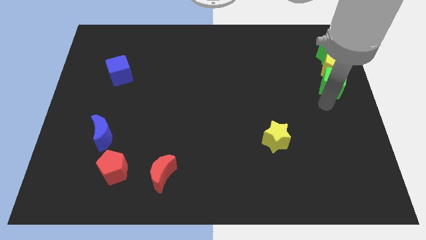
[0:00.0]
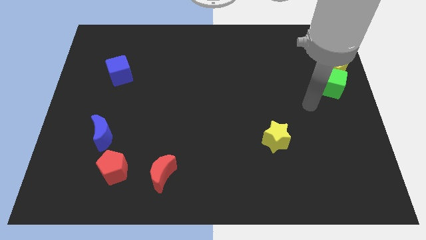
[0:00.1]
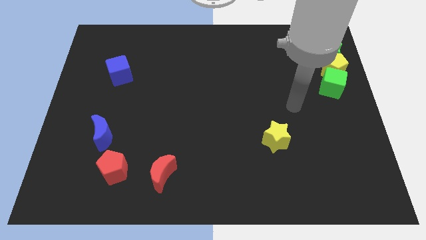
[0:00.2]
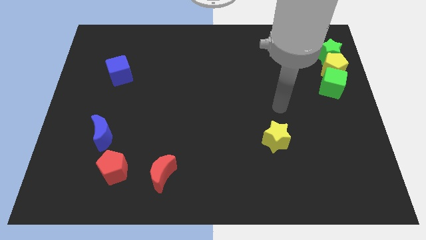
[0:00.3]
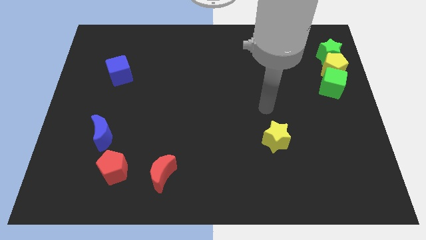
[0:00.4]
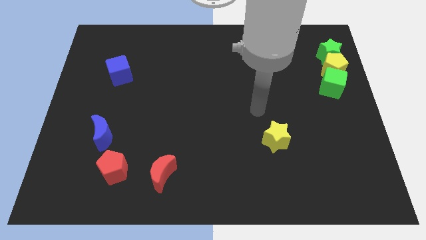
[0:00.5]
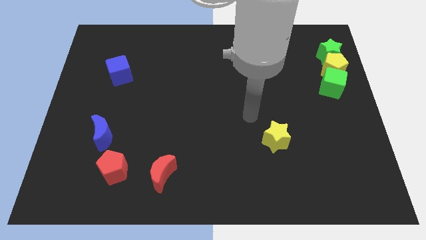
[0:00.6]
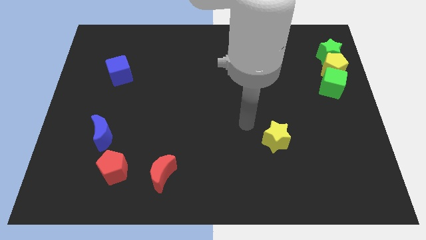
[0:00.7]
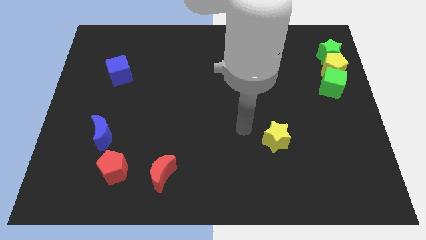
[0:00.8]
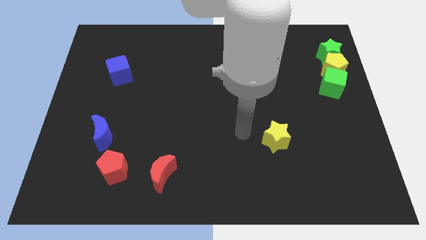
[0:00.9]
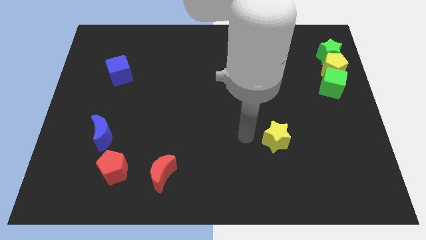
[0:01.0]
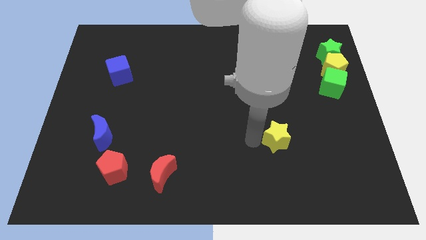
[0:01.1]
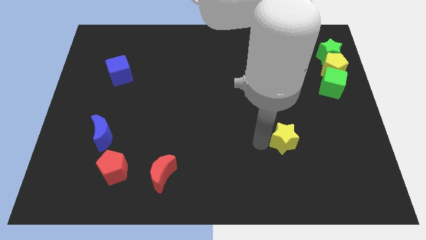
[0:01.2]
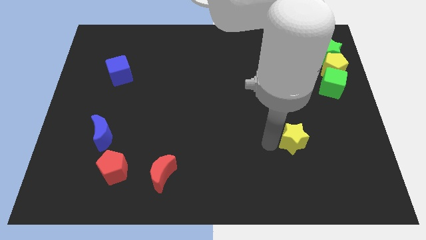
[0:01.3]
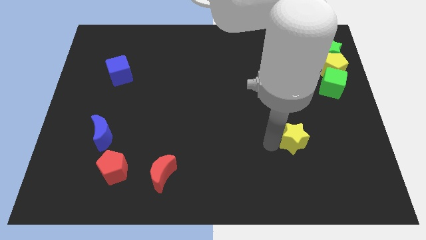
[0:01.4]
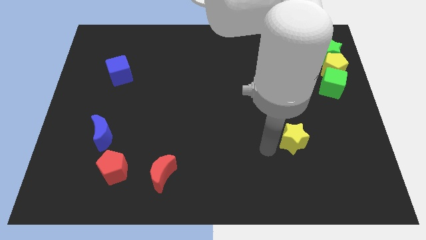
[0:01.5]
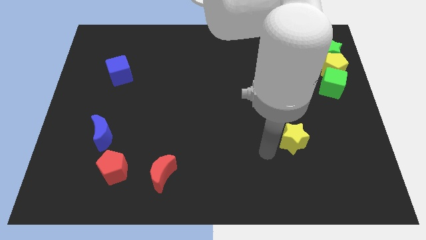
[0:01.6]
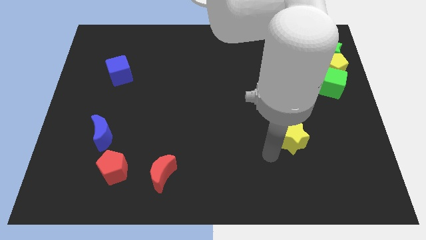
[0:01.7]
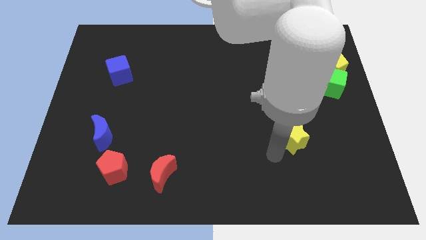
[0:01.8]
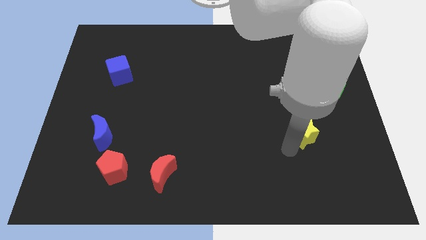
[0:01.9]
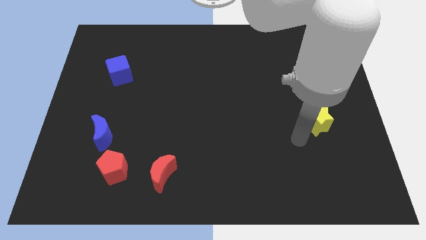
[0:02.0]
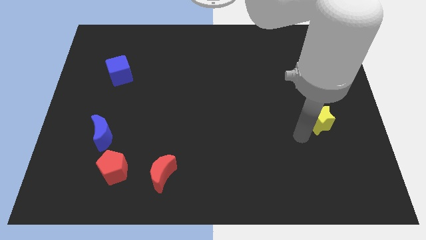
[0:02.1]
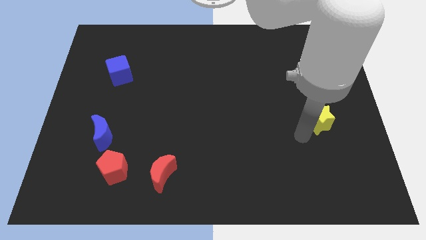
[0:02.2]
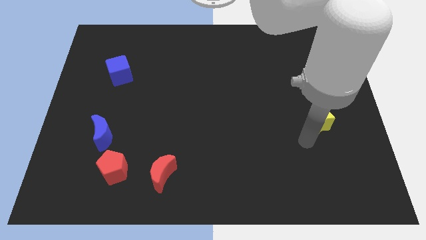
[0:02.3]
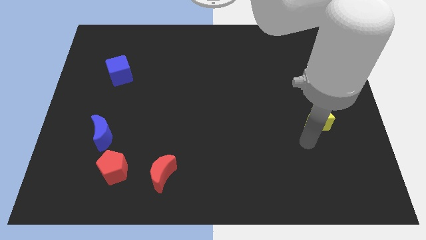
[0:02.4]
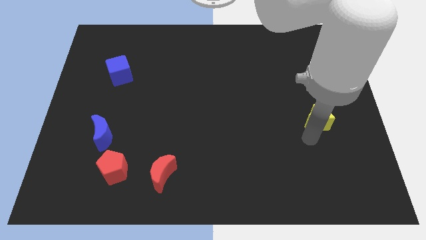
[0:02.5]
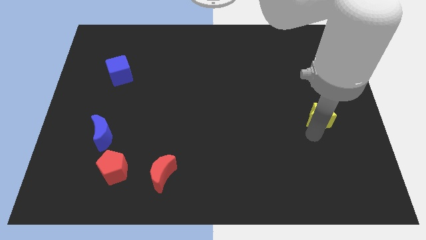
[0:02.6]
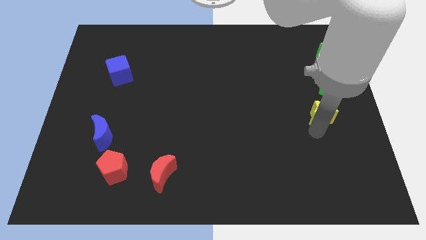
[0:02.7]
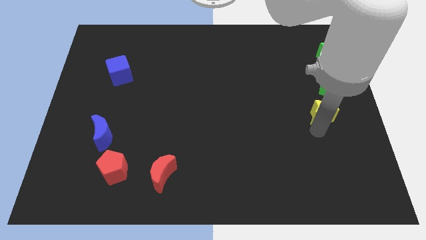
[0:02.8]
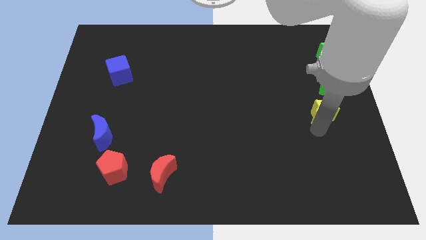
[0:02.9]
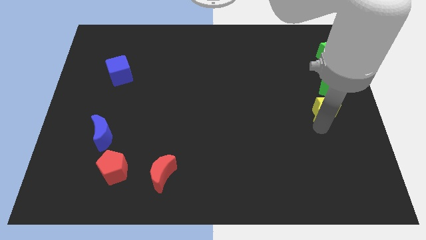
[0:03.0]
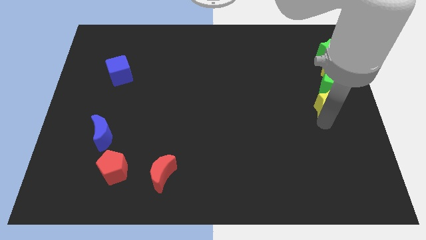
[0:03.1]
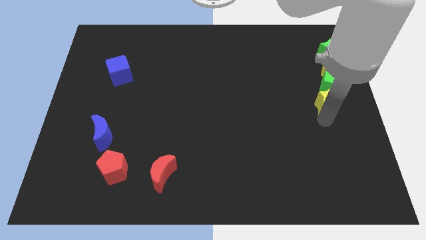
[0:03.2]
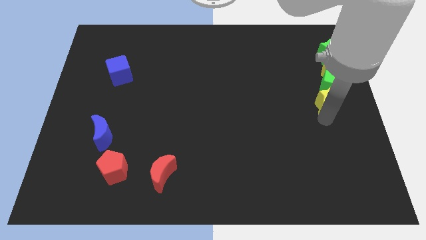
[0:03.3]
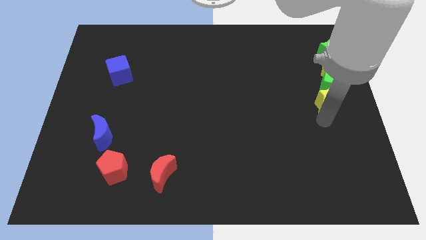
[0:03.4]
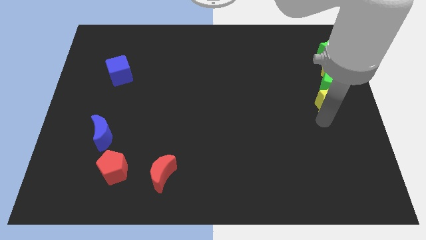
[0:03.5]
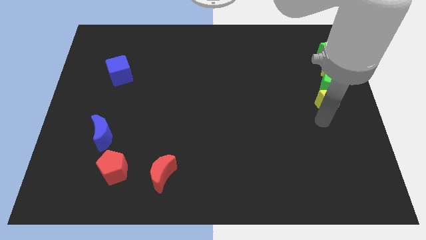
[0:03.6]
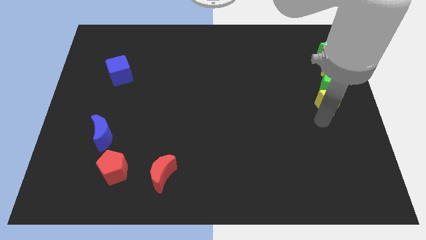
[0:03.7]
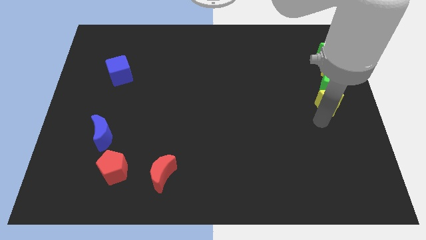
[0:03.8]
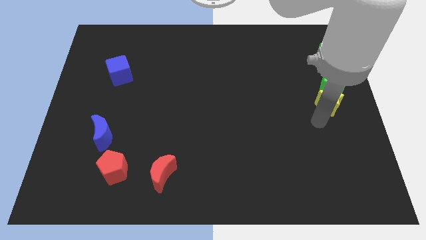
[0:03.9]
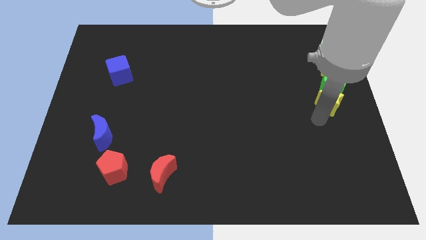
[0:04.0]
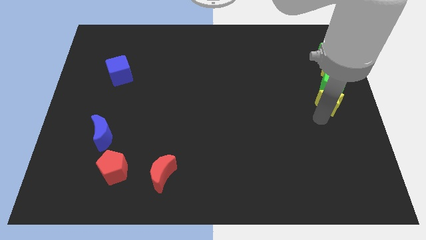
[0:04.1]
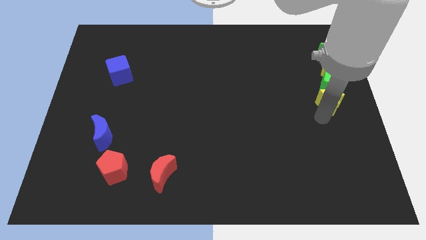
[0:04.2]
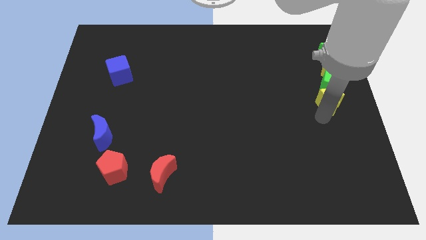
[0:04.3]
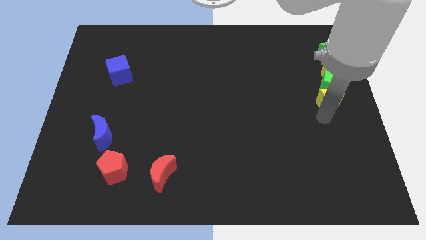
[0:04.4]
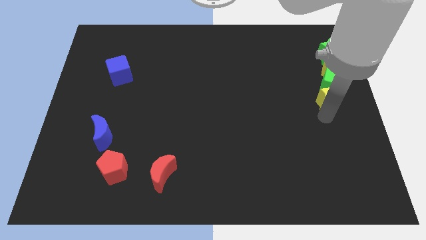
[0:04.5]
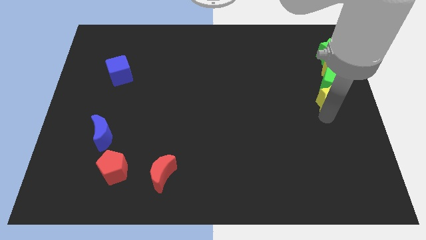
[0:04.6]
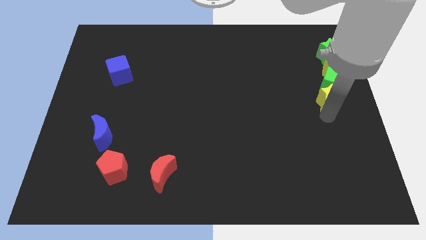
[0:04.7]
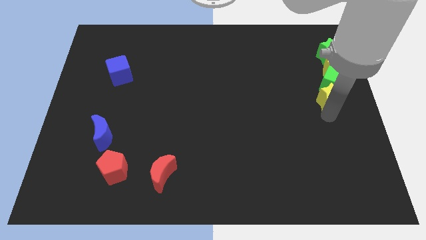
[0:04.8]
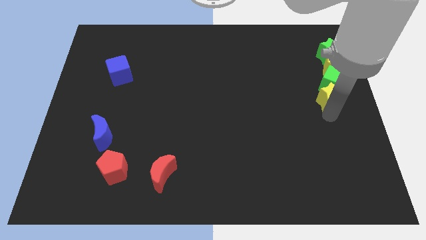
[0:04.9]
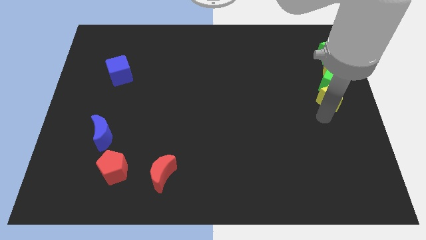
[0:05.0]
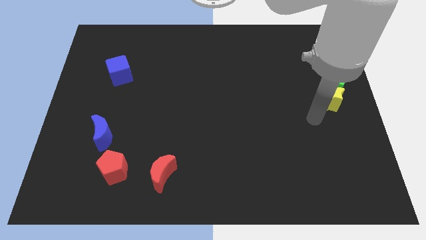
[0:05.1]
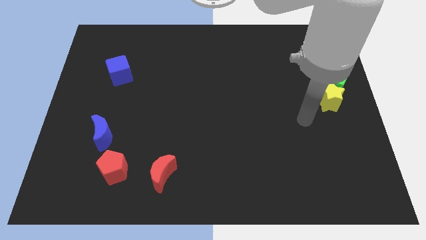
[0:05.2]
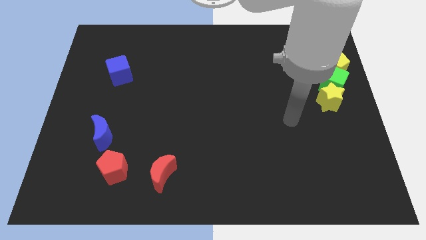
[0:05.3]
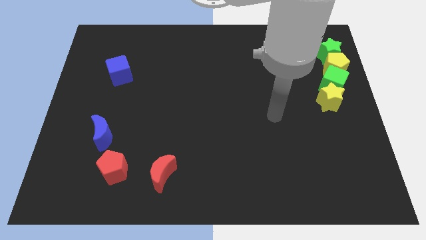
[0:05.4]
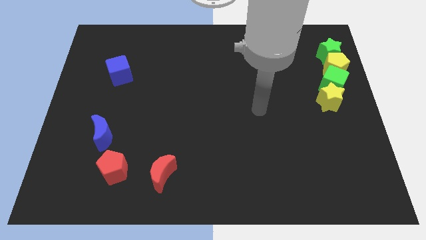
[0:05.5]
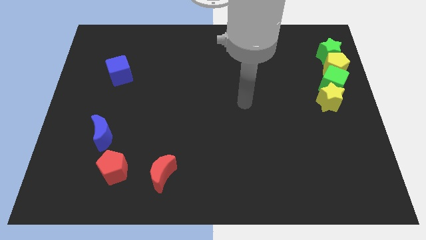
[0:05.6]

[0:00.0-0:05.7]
move the yellow star into the green cube

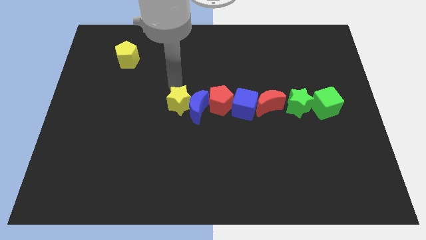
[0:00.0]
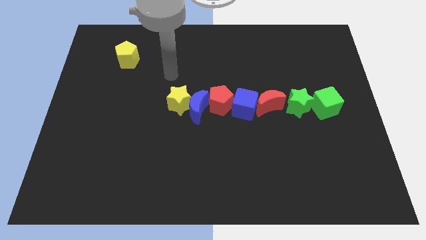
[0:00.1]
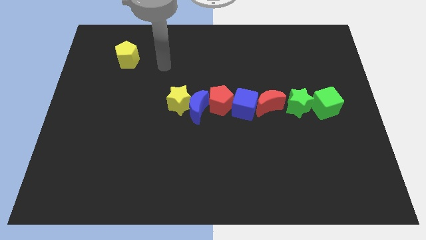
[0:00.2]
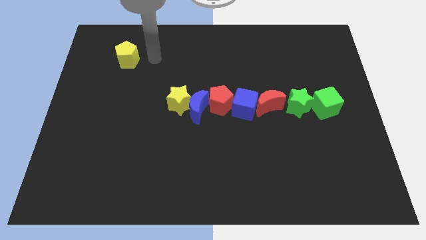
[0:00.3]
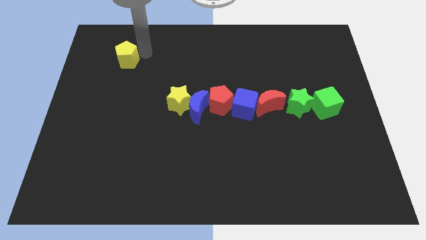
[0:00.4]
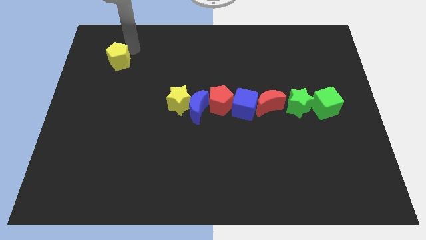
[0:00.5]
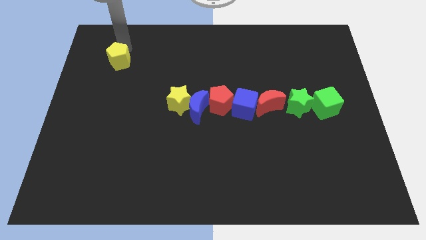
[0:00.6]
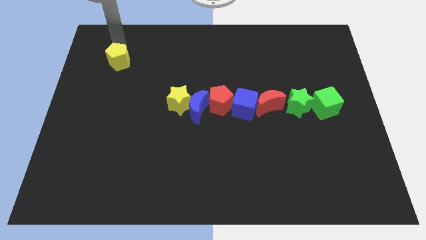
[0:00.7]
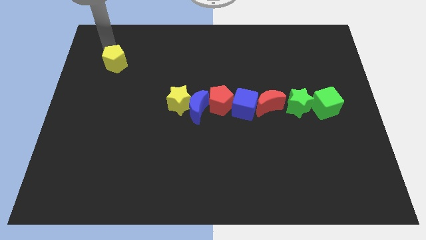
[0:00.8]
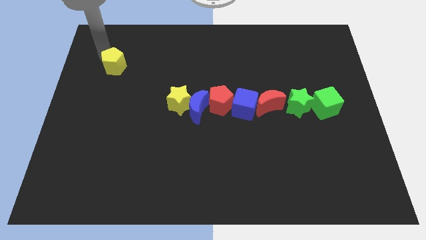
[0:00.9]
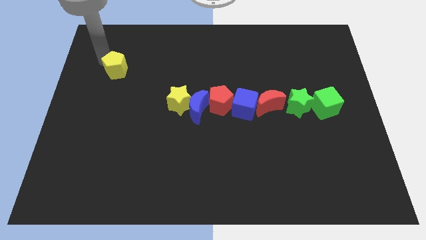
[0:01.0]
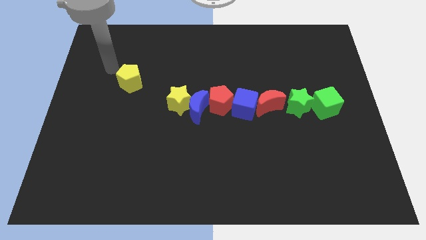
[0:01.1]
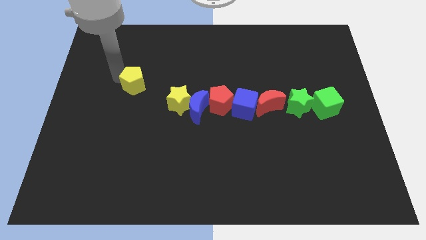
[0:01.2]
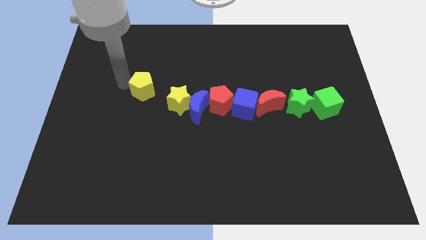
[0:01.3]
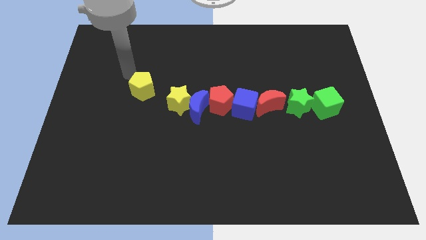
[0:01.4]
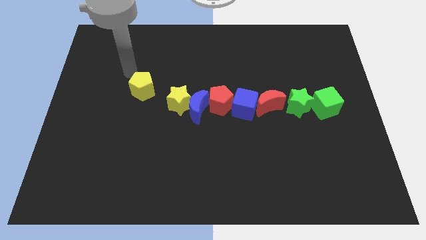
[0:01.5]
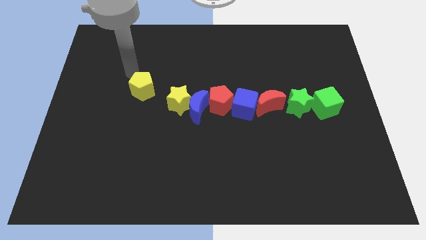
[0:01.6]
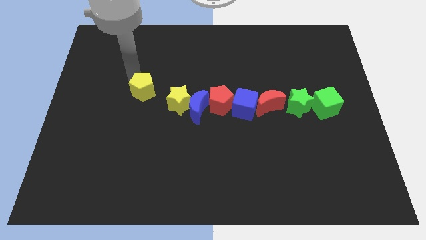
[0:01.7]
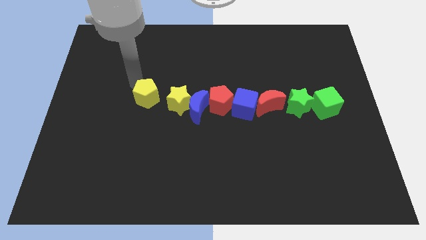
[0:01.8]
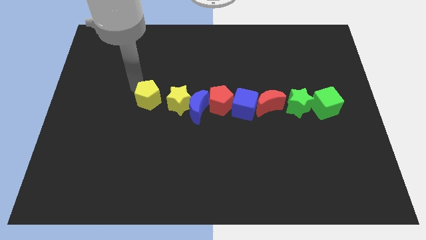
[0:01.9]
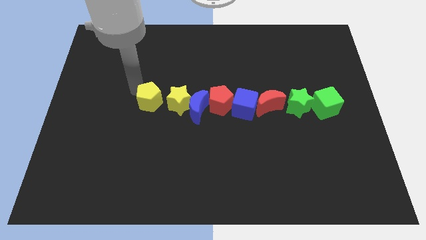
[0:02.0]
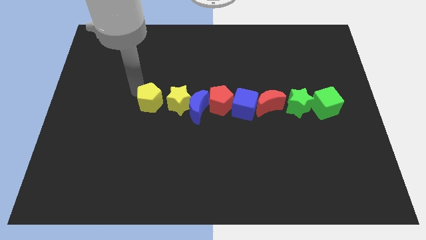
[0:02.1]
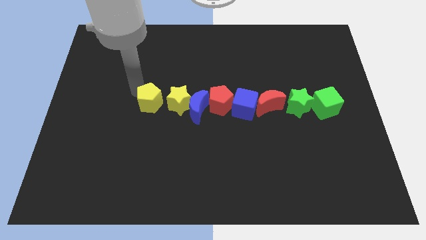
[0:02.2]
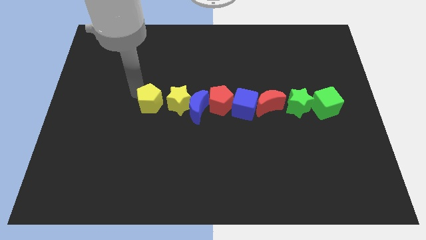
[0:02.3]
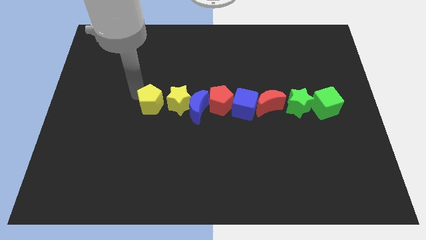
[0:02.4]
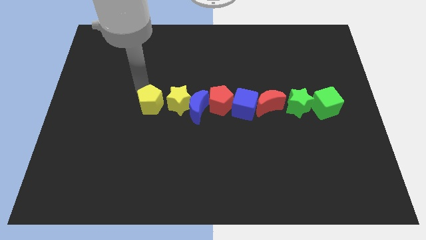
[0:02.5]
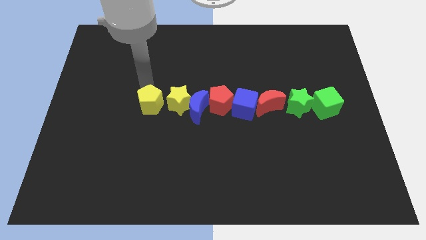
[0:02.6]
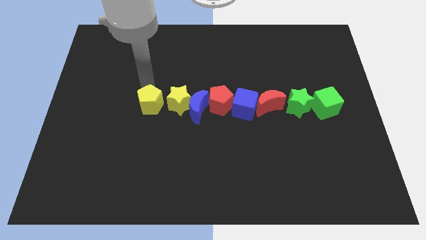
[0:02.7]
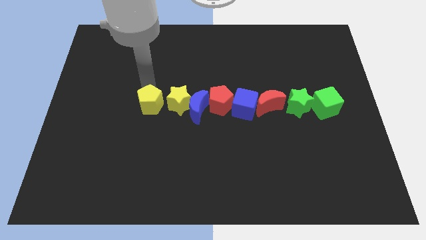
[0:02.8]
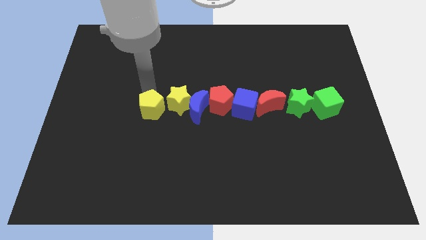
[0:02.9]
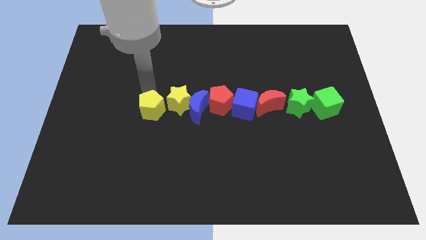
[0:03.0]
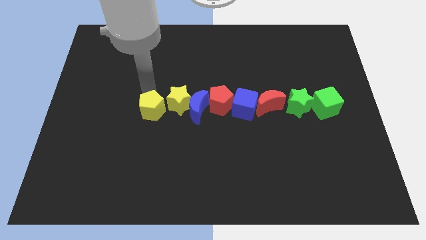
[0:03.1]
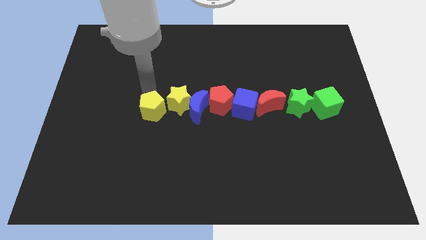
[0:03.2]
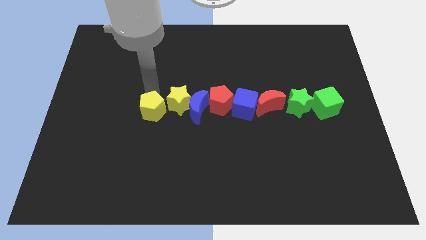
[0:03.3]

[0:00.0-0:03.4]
move yellow pentagon into yellow star
